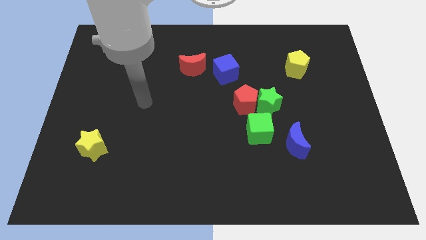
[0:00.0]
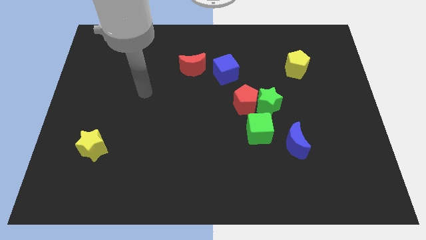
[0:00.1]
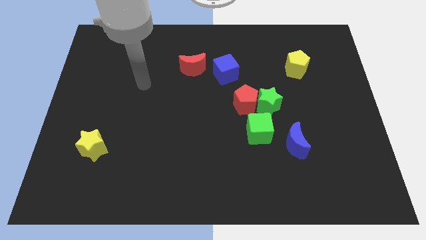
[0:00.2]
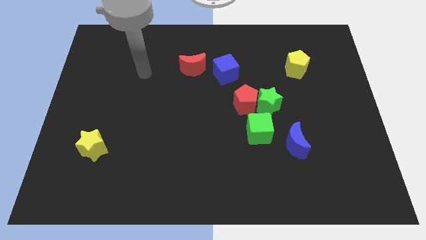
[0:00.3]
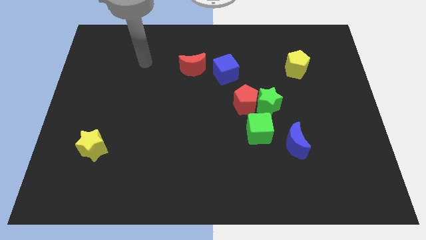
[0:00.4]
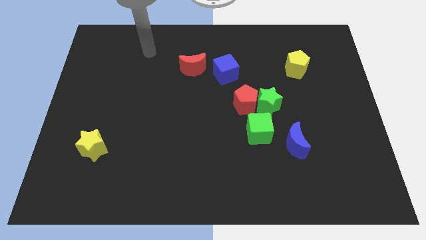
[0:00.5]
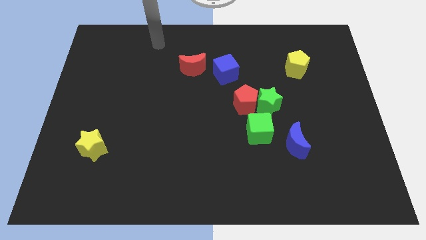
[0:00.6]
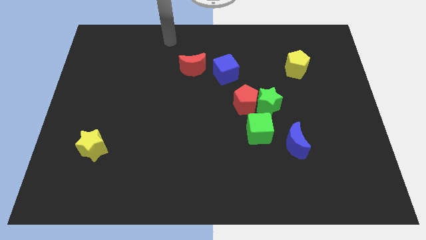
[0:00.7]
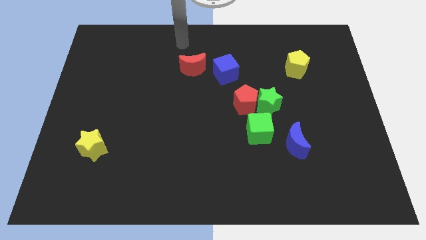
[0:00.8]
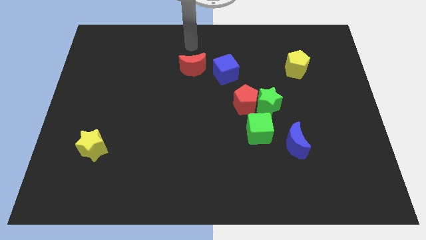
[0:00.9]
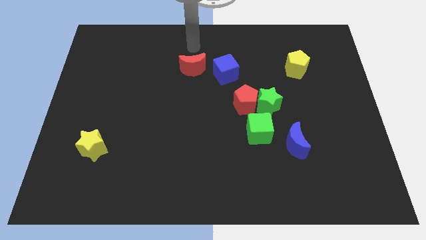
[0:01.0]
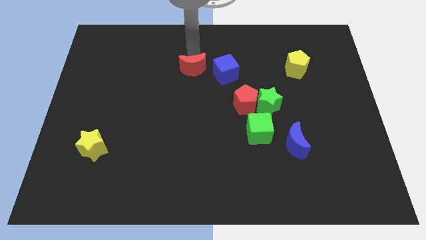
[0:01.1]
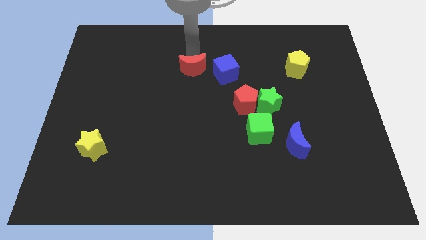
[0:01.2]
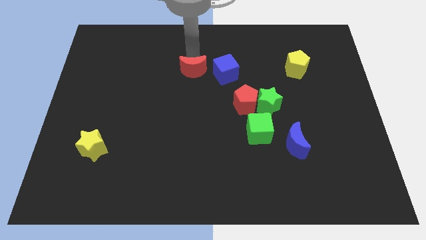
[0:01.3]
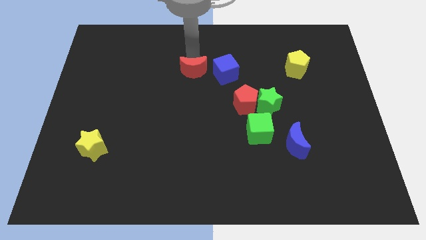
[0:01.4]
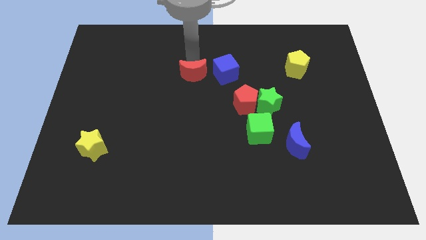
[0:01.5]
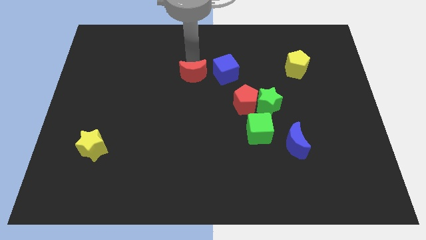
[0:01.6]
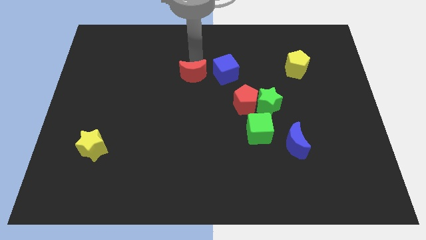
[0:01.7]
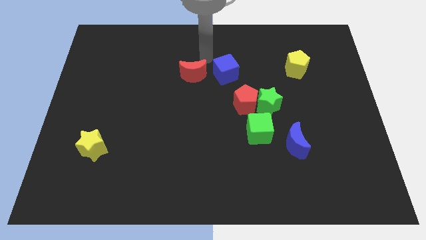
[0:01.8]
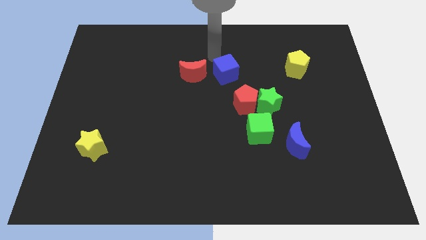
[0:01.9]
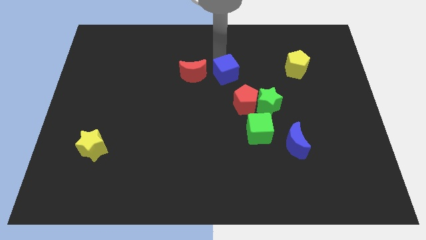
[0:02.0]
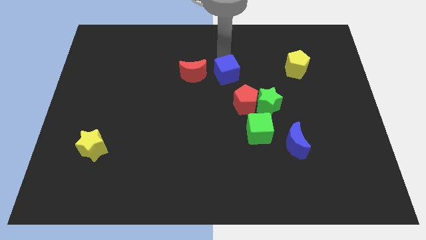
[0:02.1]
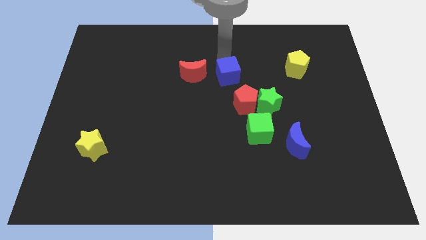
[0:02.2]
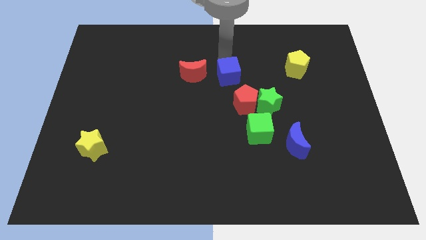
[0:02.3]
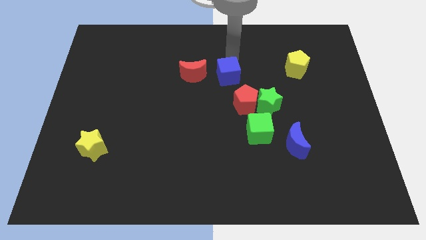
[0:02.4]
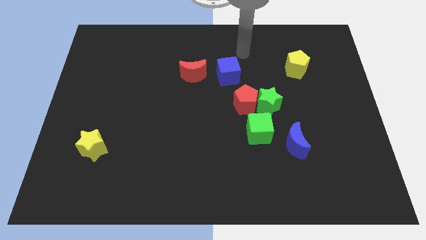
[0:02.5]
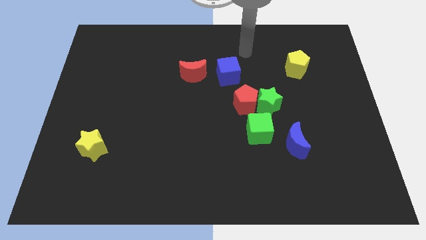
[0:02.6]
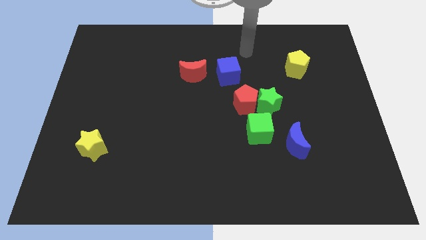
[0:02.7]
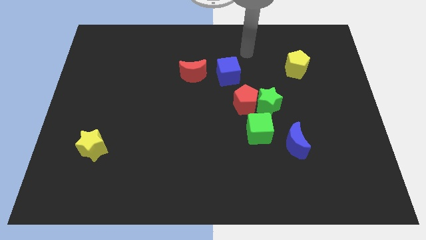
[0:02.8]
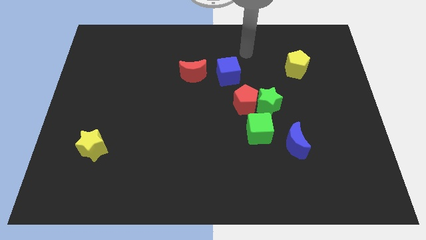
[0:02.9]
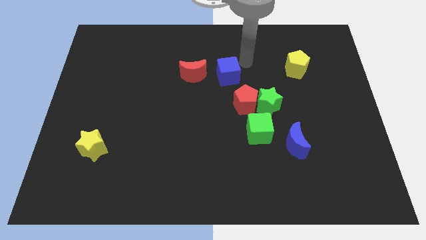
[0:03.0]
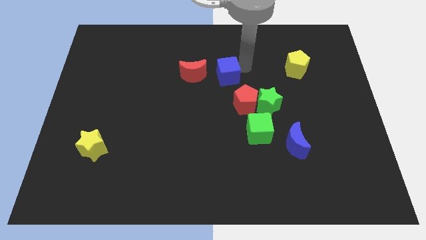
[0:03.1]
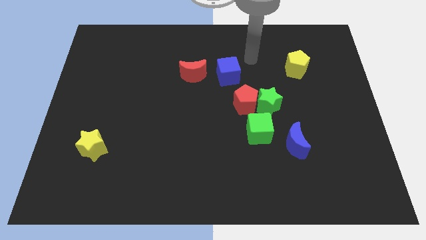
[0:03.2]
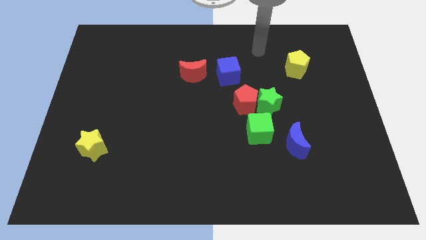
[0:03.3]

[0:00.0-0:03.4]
move the red crescent and blue cube slightly downwards

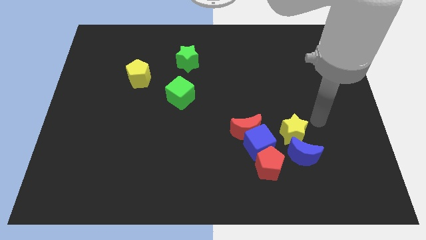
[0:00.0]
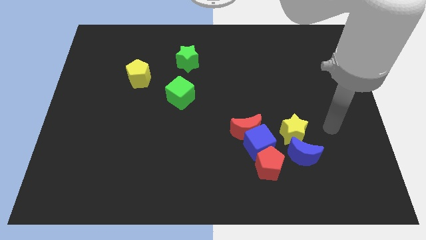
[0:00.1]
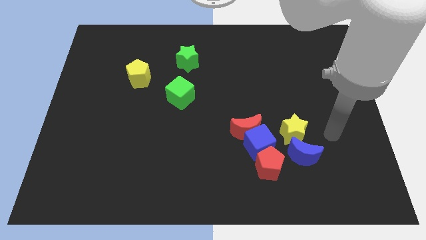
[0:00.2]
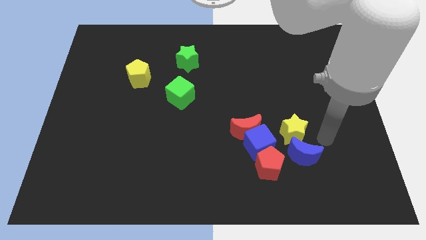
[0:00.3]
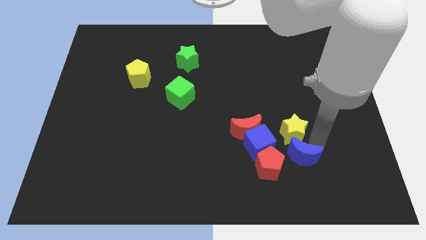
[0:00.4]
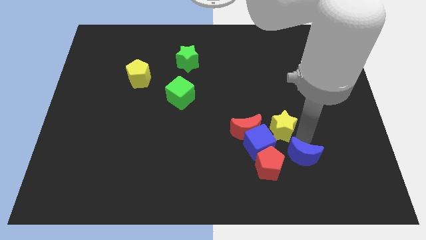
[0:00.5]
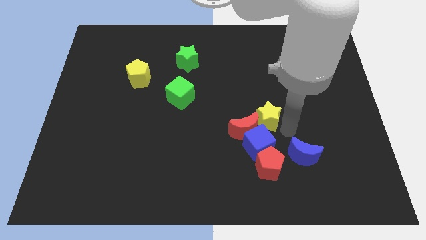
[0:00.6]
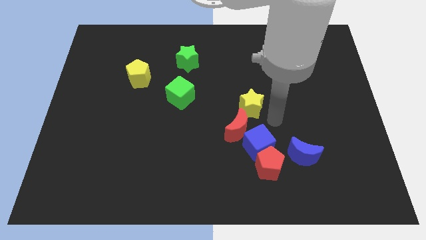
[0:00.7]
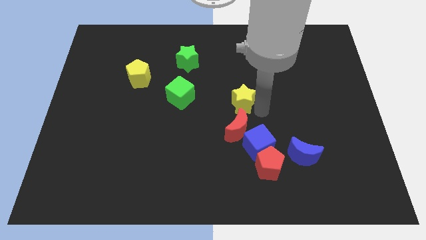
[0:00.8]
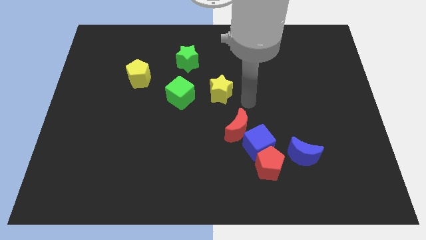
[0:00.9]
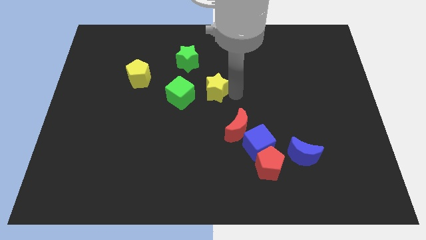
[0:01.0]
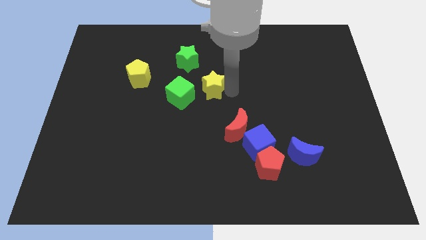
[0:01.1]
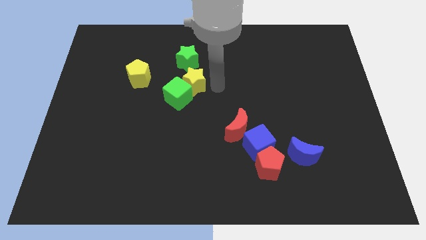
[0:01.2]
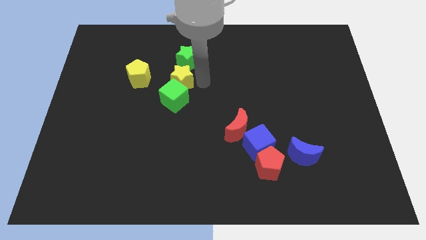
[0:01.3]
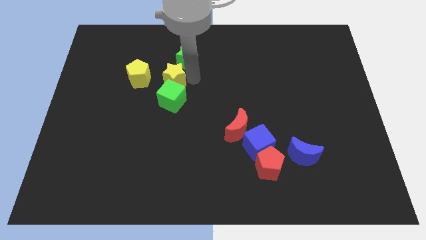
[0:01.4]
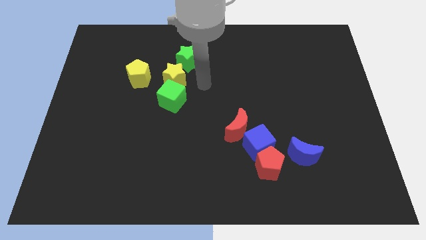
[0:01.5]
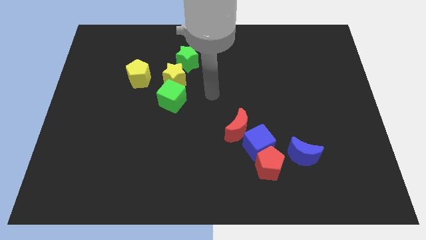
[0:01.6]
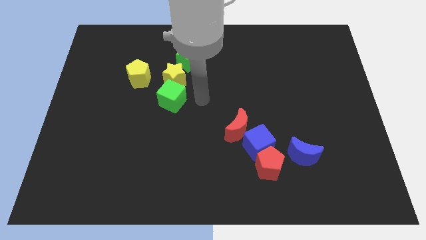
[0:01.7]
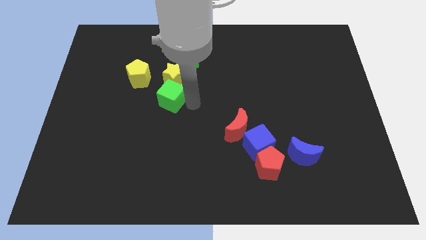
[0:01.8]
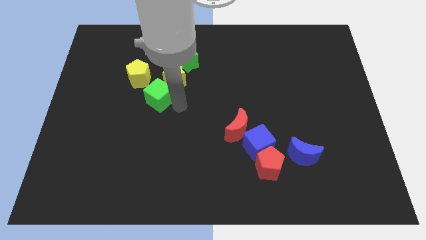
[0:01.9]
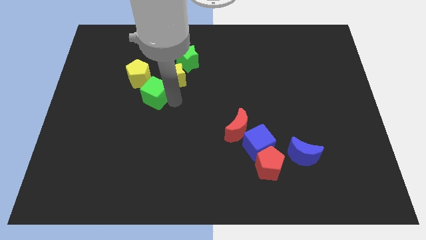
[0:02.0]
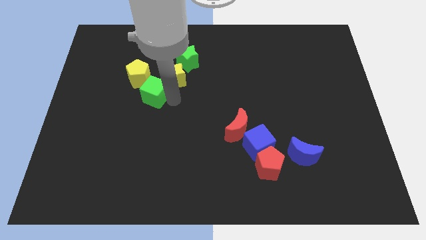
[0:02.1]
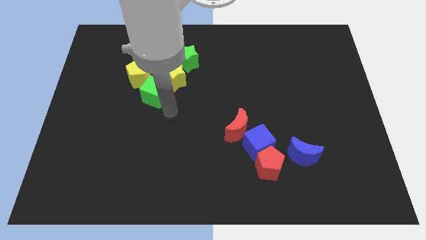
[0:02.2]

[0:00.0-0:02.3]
move the yellow star between green star and green cube

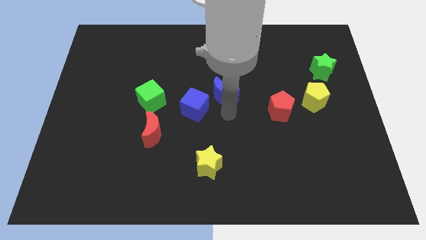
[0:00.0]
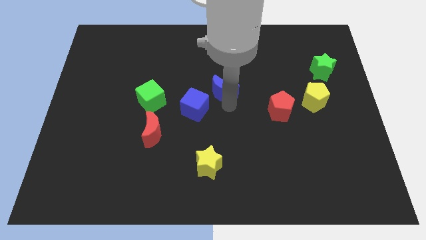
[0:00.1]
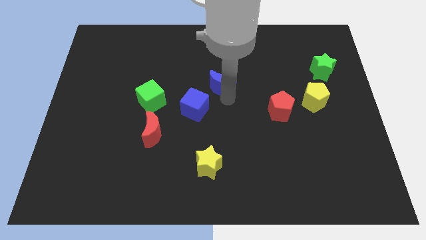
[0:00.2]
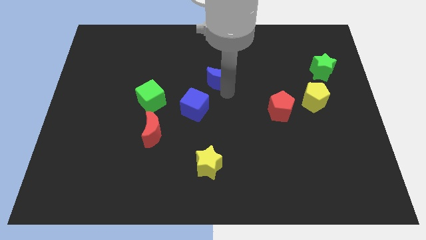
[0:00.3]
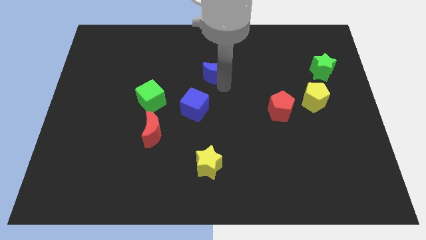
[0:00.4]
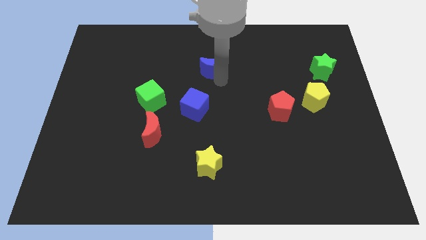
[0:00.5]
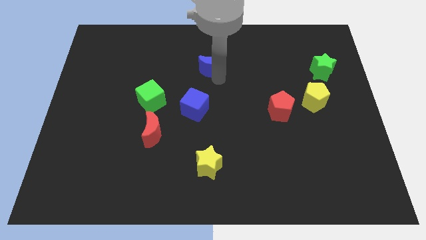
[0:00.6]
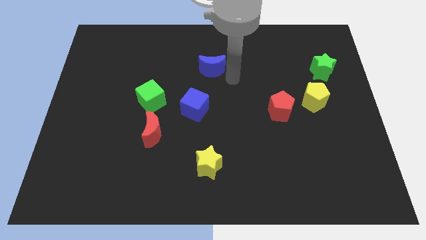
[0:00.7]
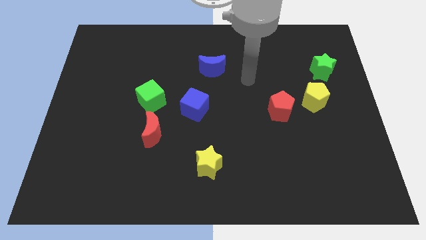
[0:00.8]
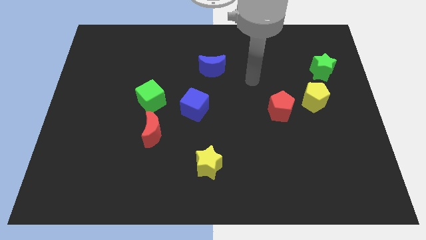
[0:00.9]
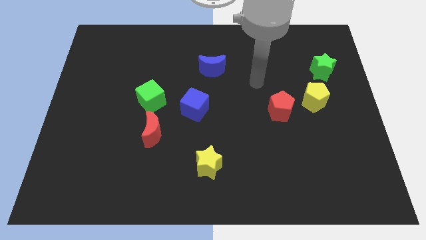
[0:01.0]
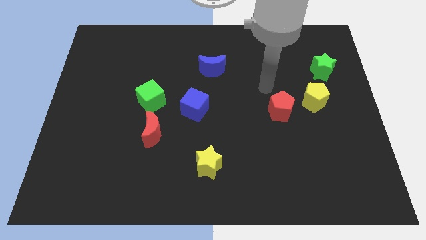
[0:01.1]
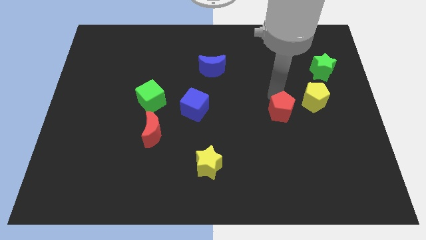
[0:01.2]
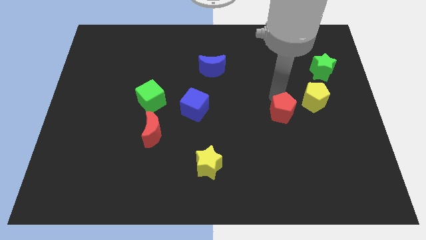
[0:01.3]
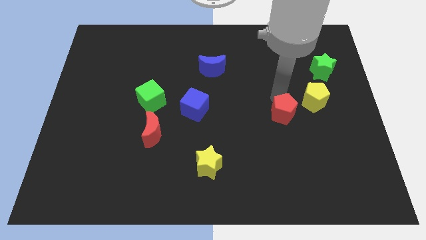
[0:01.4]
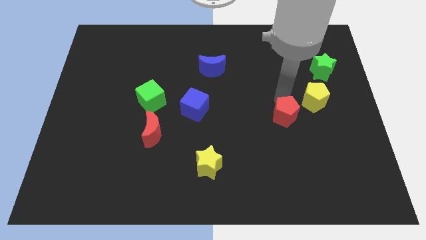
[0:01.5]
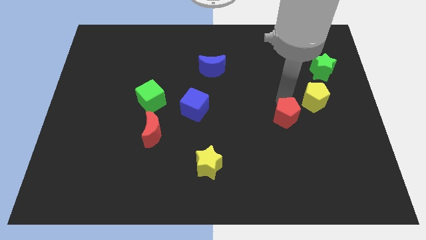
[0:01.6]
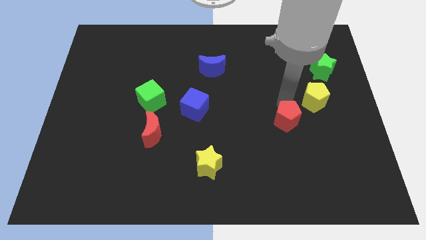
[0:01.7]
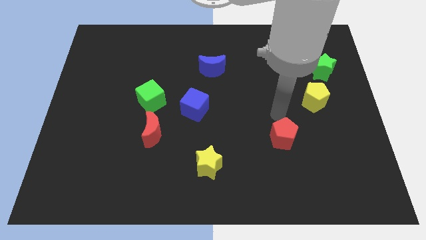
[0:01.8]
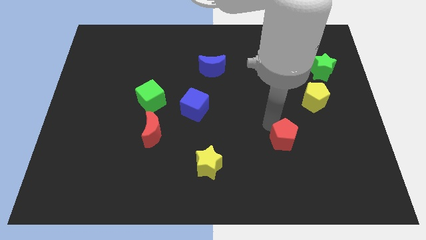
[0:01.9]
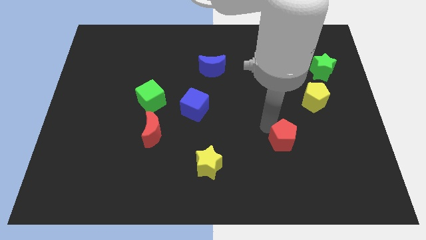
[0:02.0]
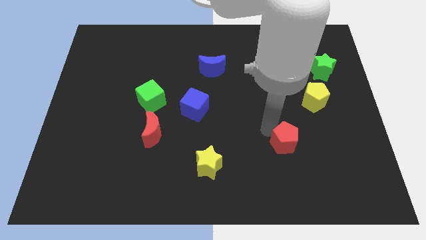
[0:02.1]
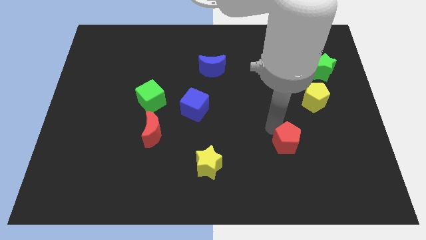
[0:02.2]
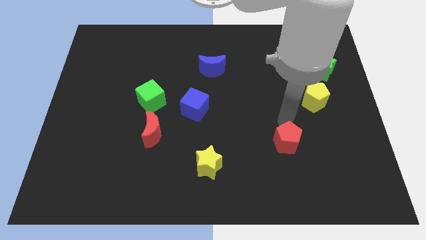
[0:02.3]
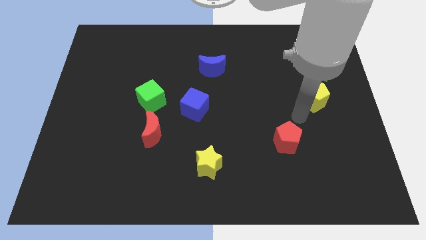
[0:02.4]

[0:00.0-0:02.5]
push red pentagon diagonally below yellow pentagon

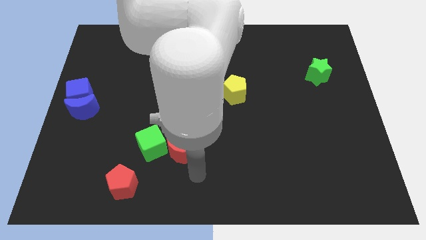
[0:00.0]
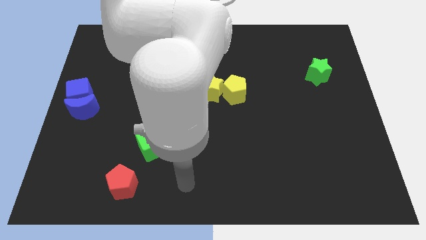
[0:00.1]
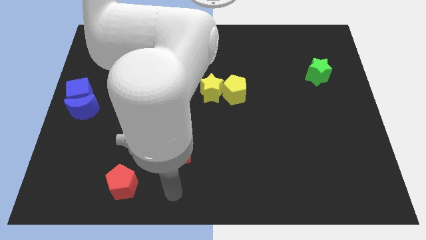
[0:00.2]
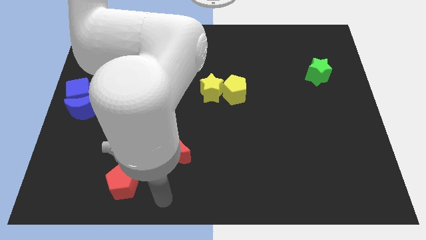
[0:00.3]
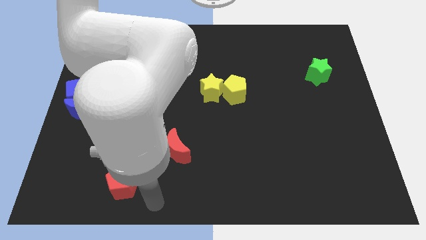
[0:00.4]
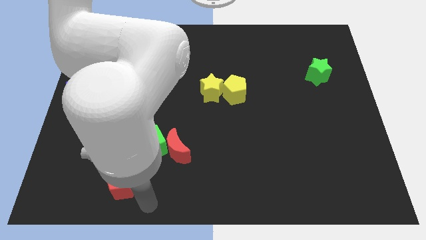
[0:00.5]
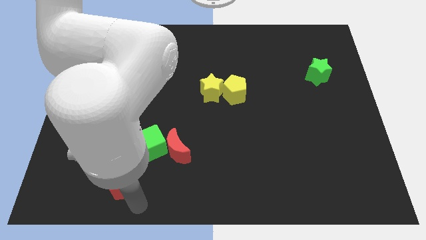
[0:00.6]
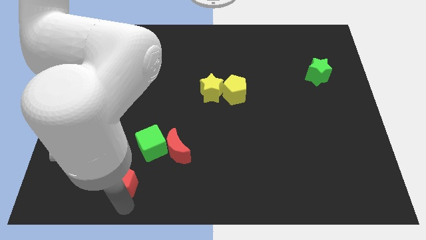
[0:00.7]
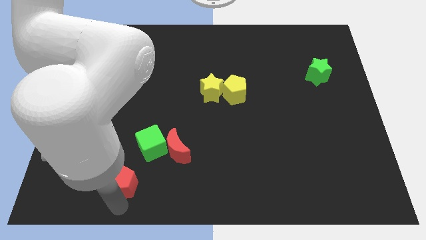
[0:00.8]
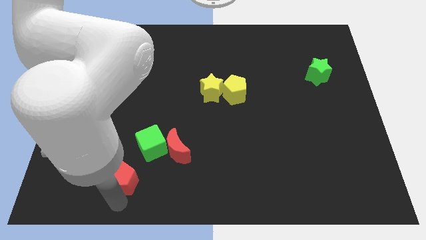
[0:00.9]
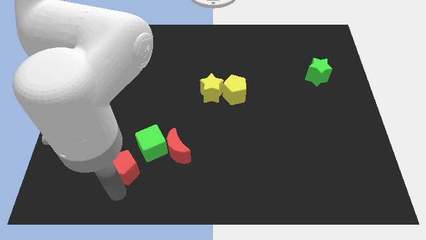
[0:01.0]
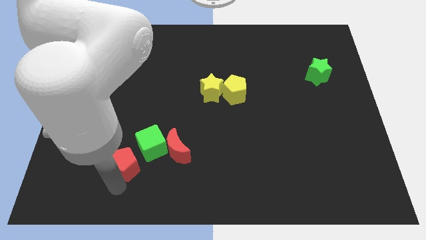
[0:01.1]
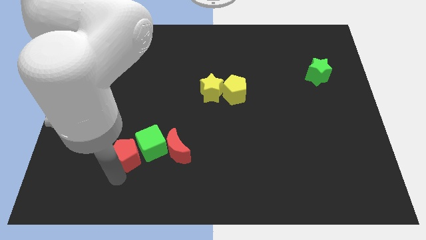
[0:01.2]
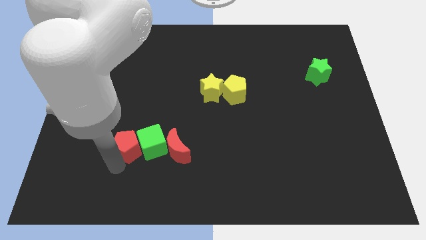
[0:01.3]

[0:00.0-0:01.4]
slide the red pentagon parallel to the left side of the green cube
